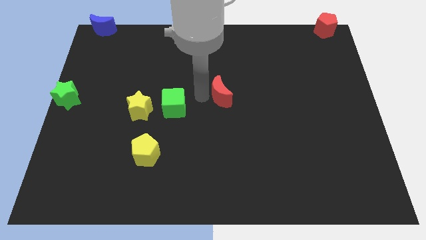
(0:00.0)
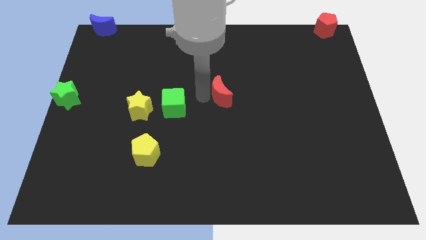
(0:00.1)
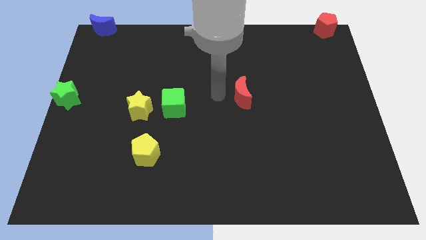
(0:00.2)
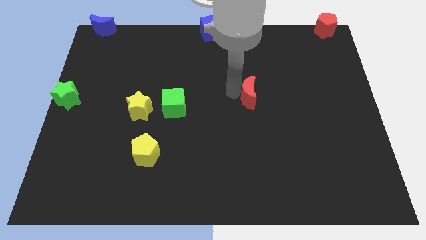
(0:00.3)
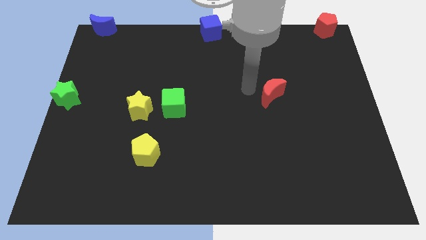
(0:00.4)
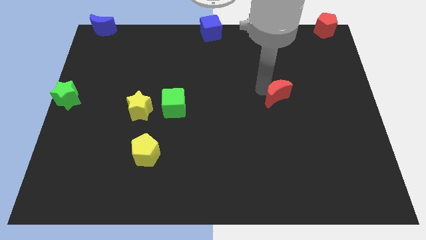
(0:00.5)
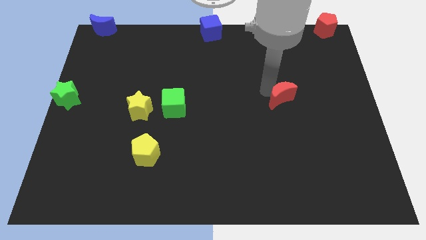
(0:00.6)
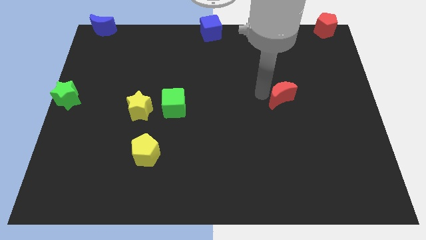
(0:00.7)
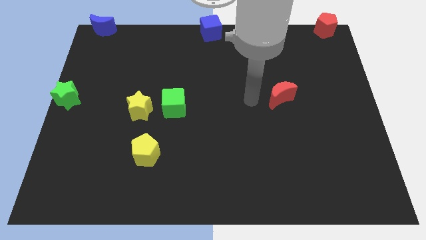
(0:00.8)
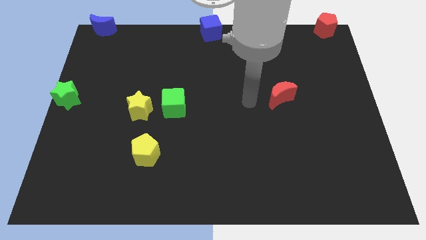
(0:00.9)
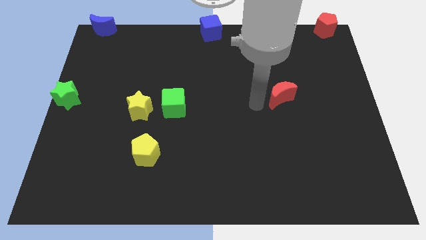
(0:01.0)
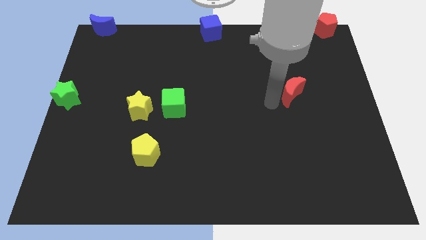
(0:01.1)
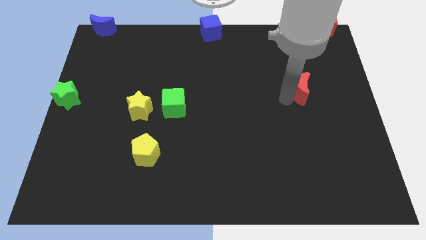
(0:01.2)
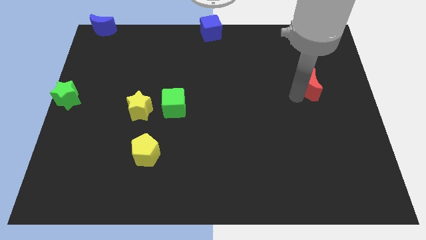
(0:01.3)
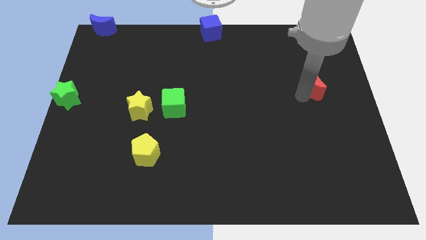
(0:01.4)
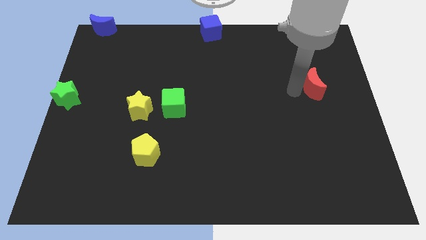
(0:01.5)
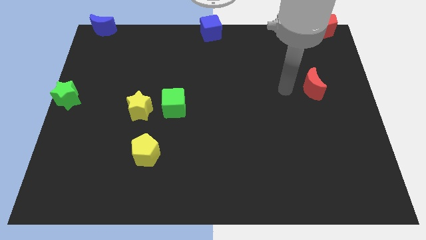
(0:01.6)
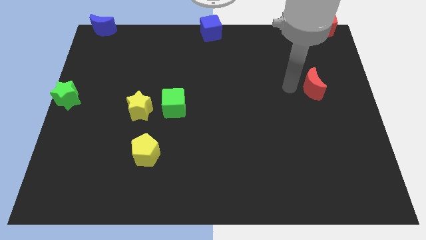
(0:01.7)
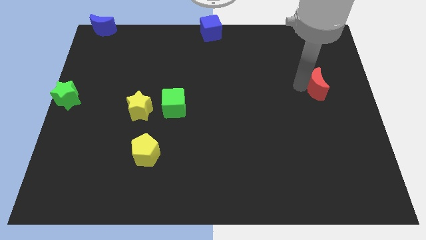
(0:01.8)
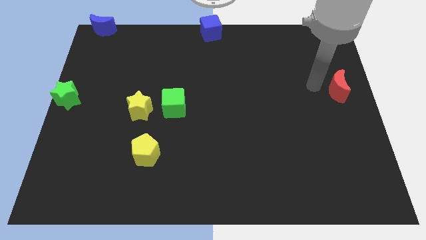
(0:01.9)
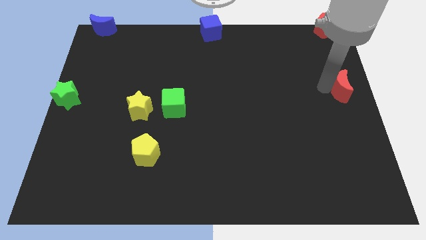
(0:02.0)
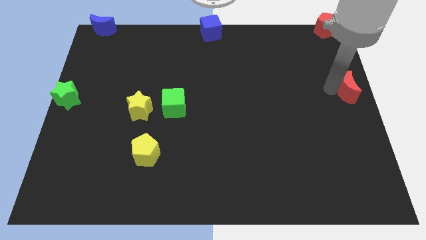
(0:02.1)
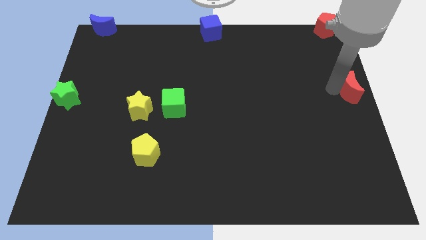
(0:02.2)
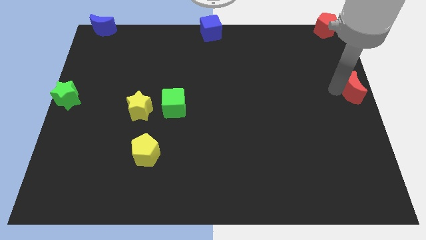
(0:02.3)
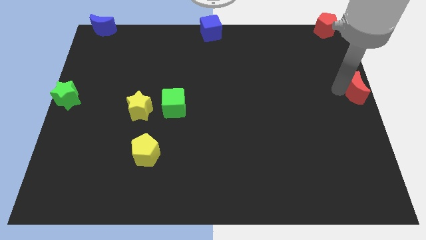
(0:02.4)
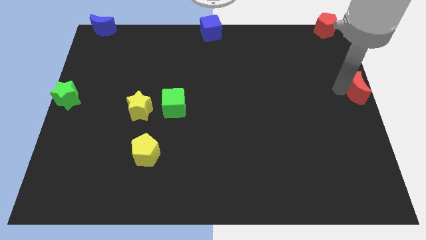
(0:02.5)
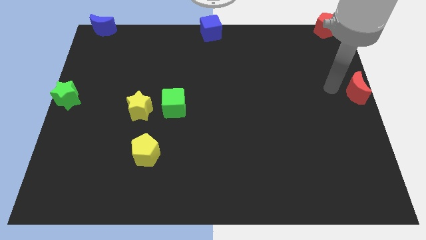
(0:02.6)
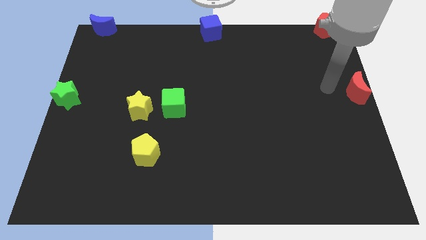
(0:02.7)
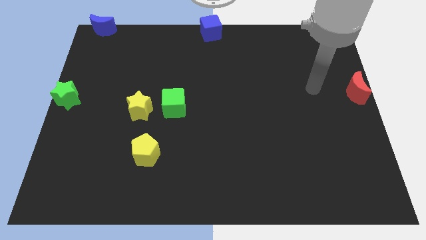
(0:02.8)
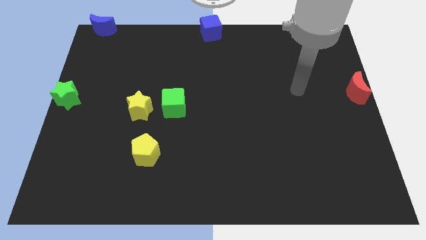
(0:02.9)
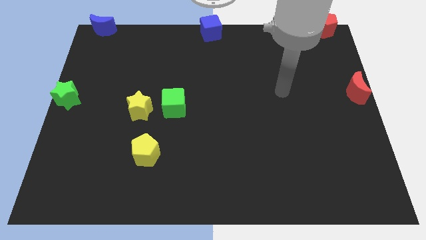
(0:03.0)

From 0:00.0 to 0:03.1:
slide the red moon to the center right

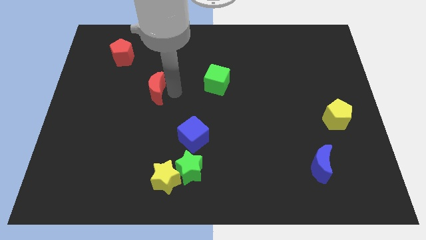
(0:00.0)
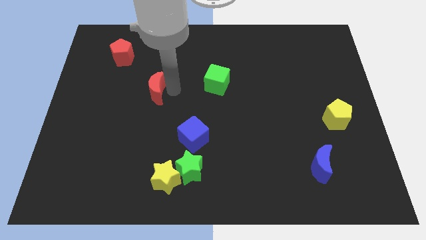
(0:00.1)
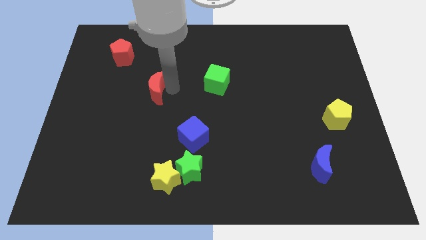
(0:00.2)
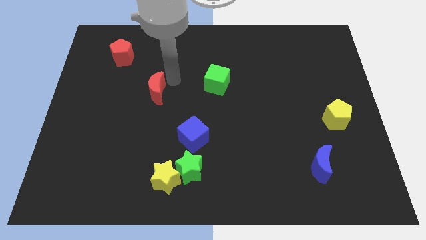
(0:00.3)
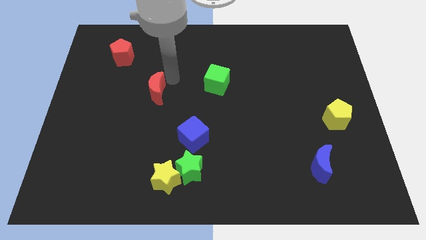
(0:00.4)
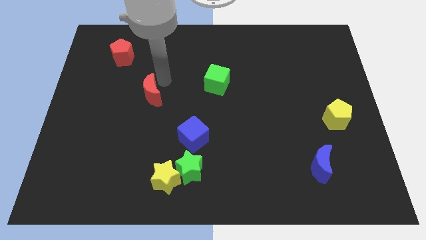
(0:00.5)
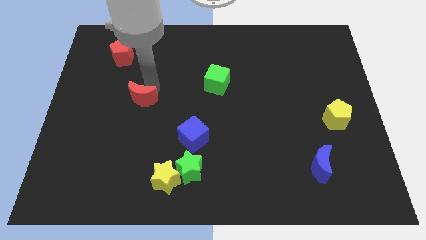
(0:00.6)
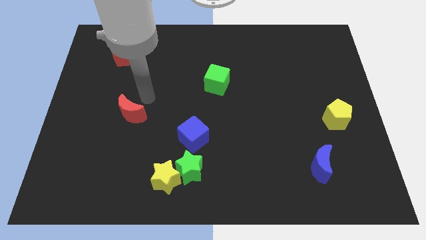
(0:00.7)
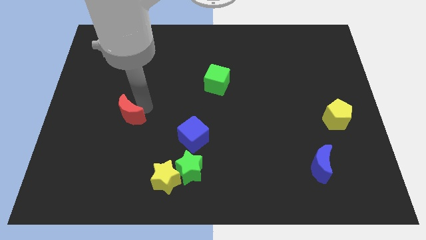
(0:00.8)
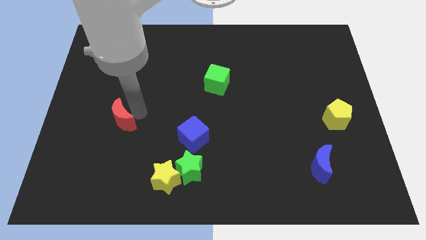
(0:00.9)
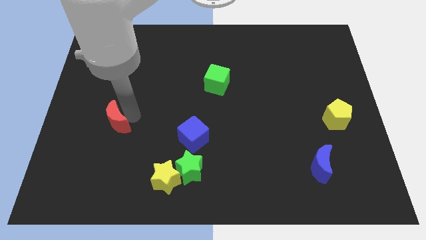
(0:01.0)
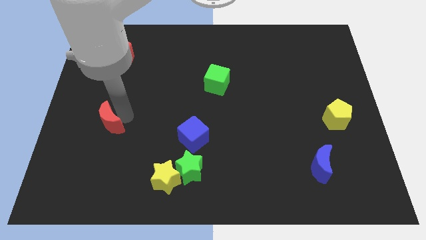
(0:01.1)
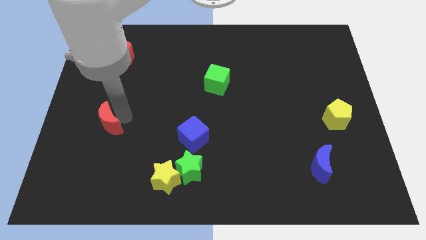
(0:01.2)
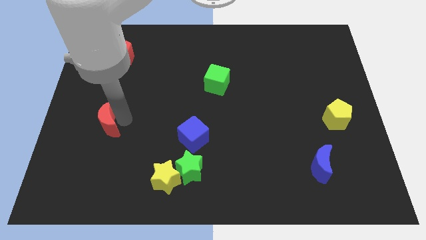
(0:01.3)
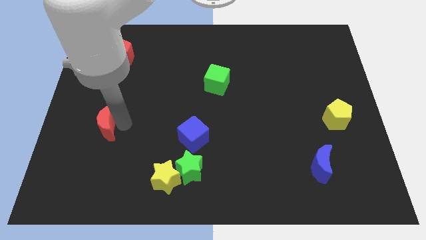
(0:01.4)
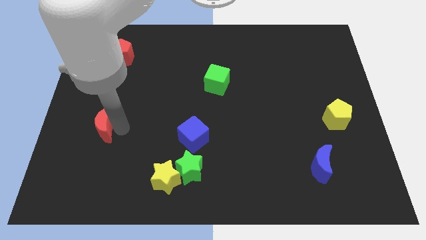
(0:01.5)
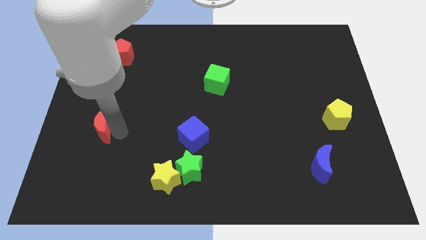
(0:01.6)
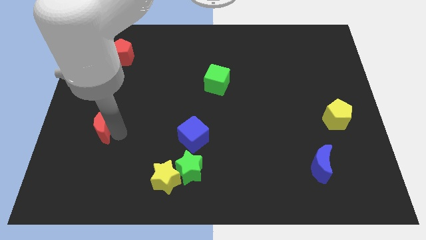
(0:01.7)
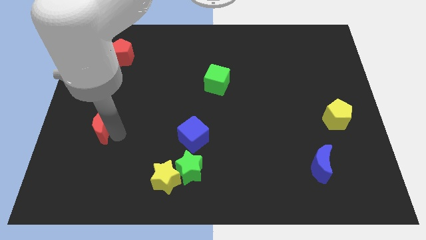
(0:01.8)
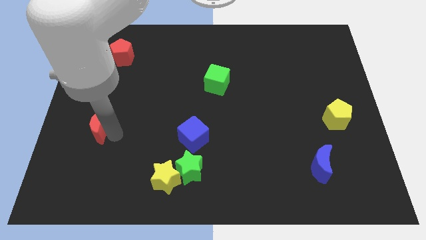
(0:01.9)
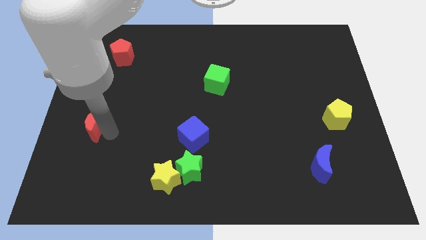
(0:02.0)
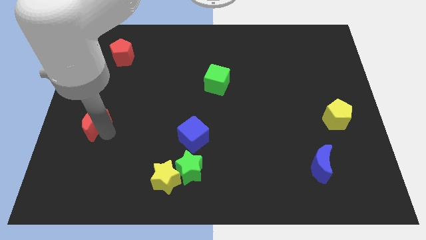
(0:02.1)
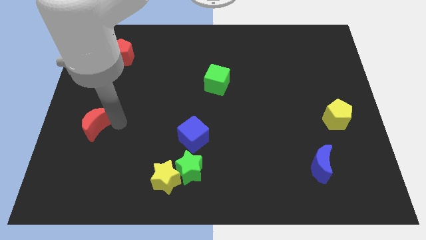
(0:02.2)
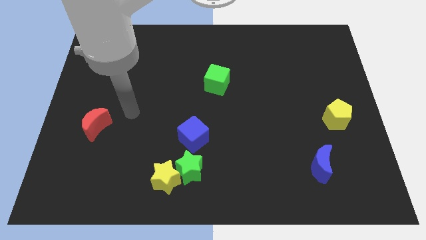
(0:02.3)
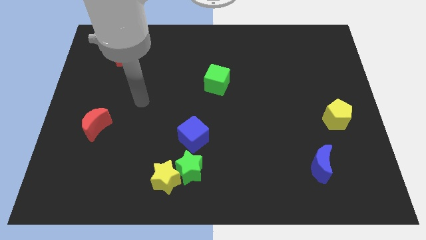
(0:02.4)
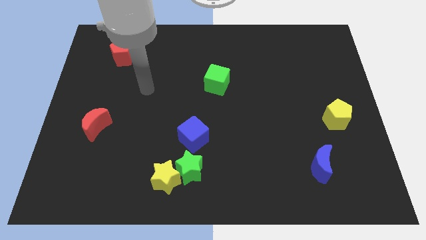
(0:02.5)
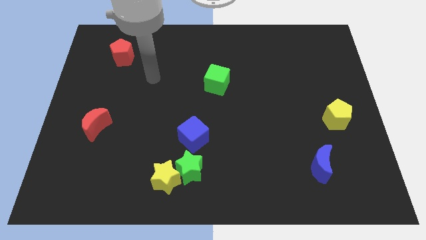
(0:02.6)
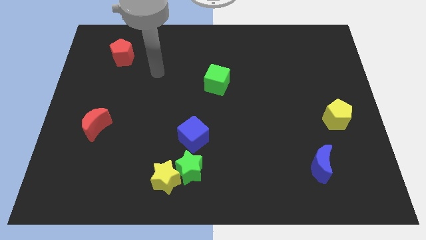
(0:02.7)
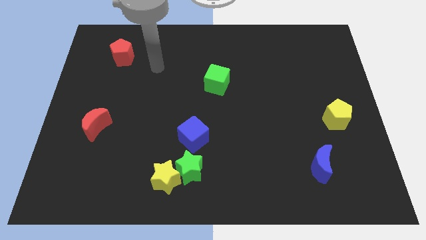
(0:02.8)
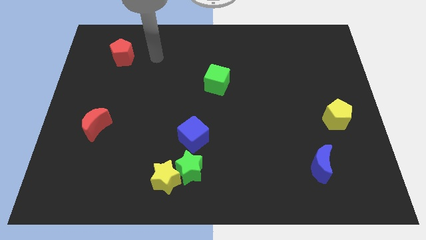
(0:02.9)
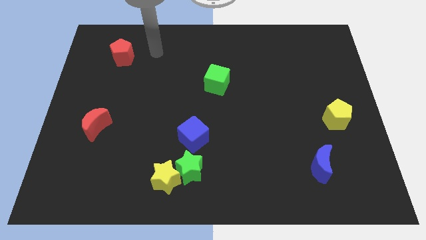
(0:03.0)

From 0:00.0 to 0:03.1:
move red moon to left of blue cube

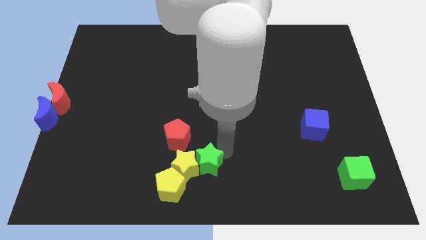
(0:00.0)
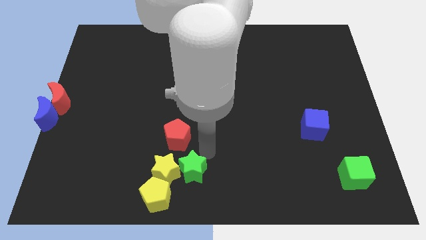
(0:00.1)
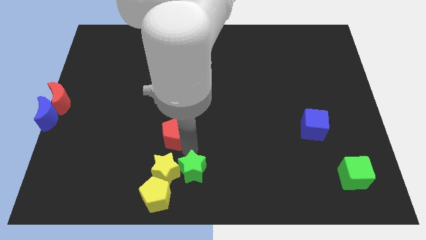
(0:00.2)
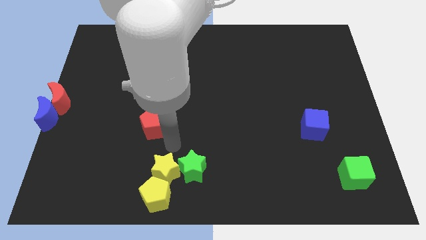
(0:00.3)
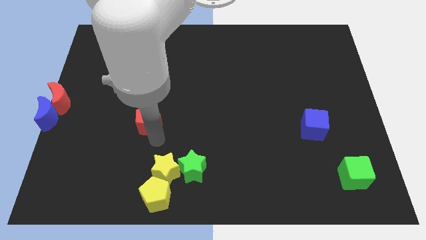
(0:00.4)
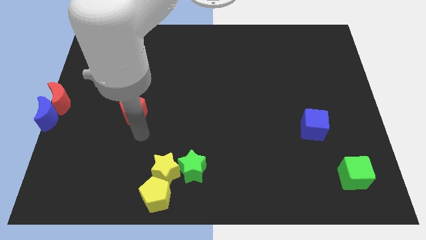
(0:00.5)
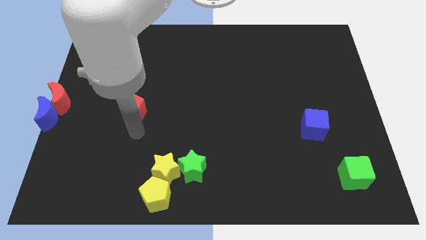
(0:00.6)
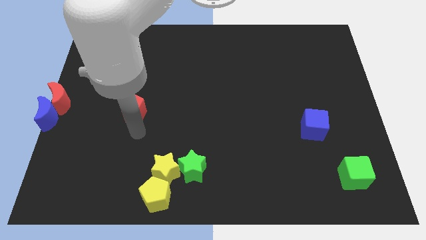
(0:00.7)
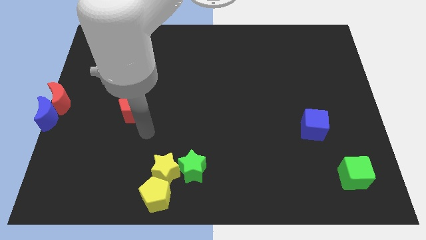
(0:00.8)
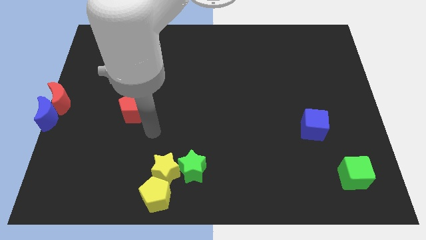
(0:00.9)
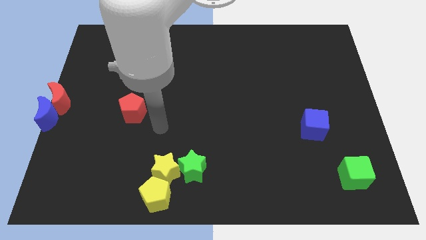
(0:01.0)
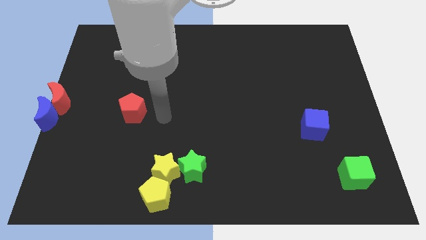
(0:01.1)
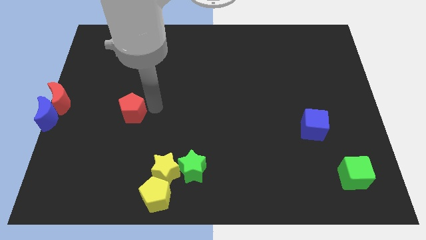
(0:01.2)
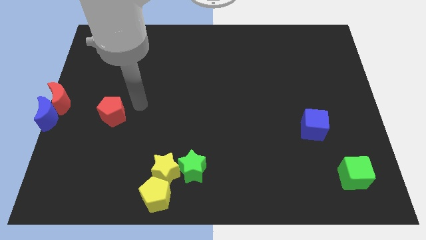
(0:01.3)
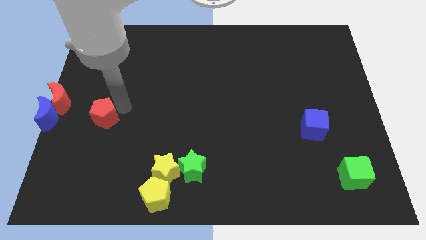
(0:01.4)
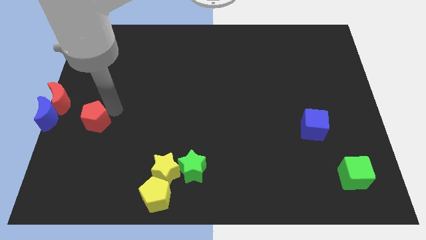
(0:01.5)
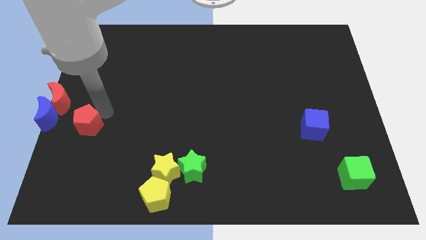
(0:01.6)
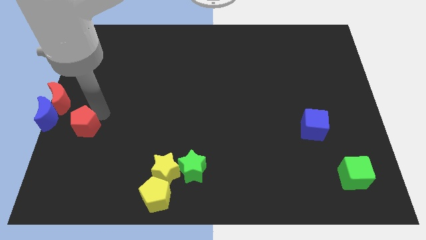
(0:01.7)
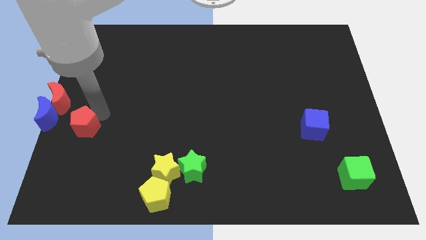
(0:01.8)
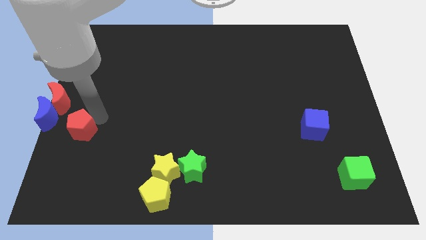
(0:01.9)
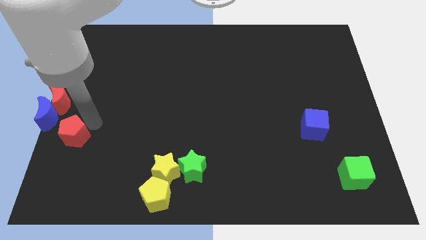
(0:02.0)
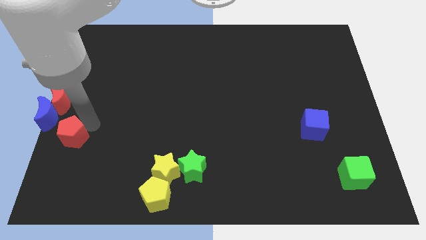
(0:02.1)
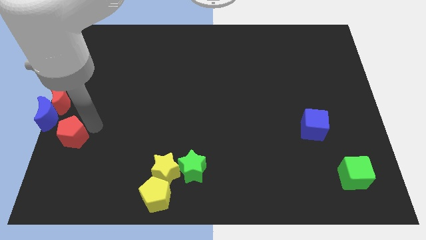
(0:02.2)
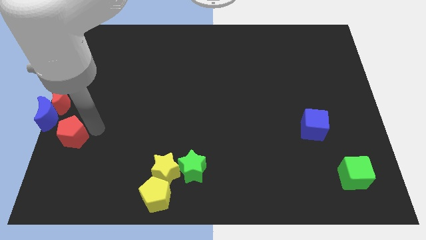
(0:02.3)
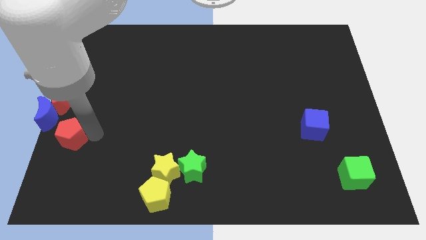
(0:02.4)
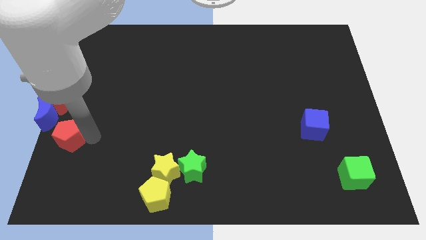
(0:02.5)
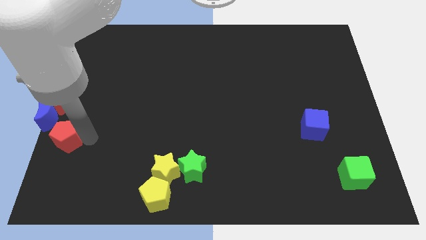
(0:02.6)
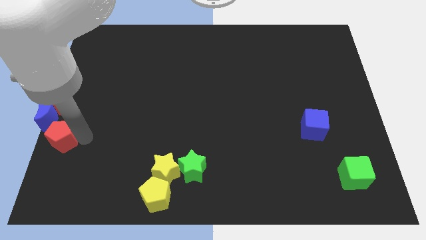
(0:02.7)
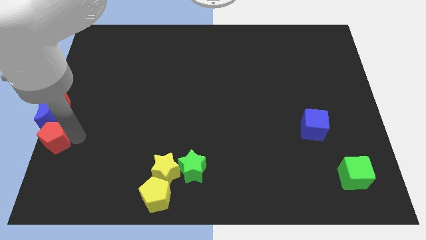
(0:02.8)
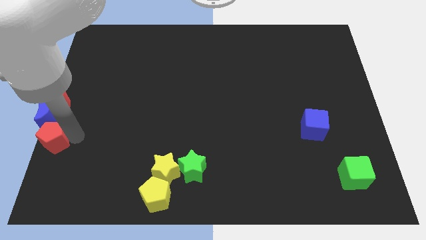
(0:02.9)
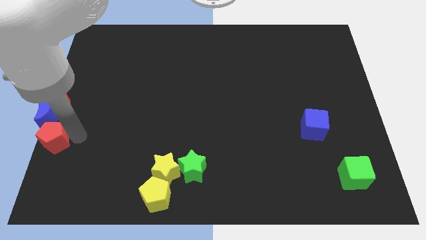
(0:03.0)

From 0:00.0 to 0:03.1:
push the red pentagon to the bottom of the blue moon
